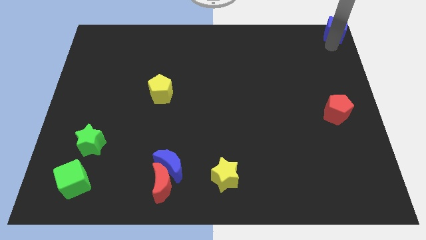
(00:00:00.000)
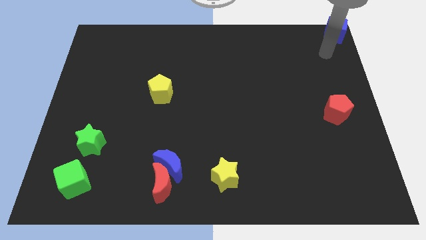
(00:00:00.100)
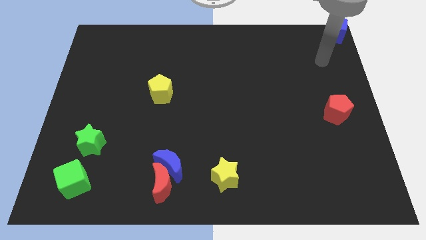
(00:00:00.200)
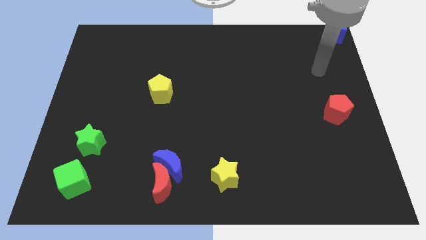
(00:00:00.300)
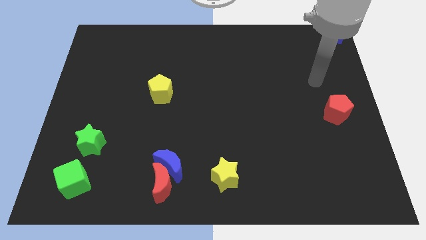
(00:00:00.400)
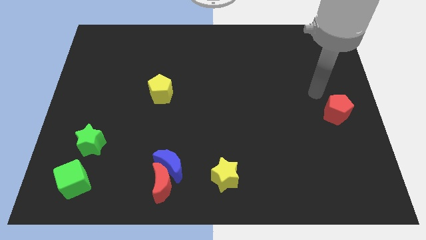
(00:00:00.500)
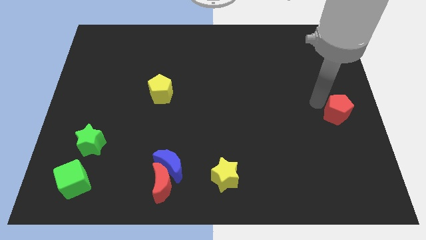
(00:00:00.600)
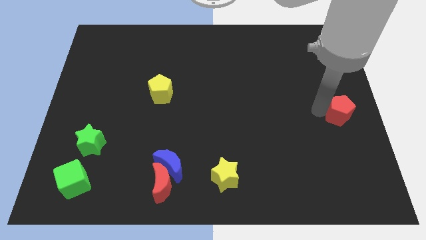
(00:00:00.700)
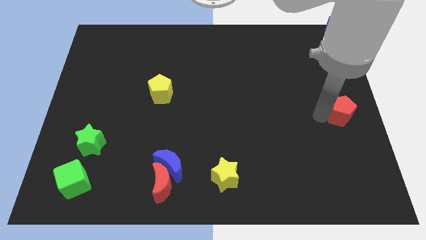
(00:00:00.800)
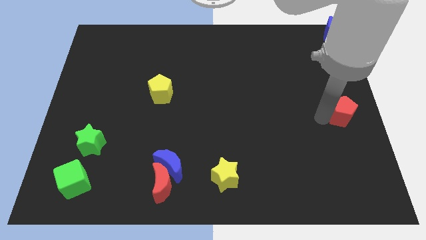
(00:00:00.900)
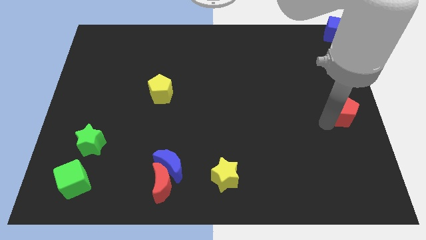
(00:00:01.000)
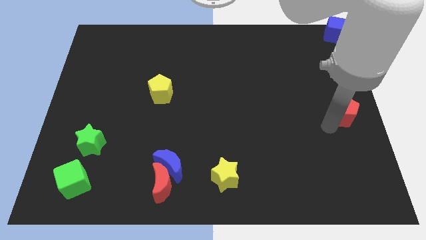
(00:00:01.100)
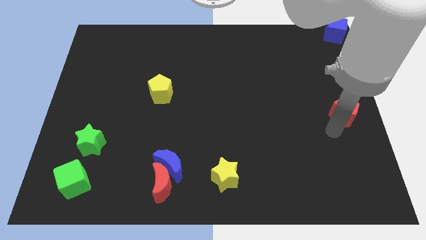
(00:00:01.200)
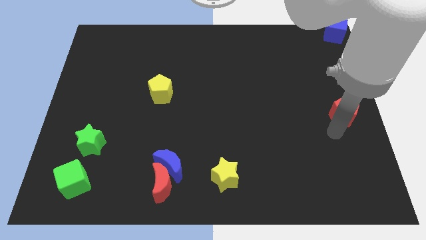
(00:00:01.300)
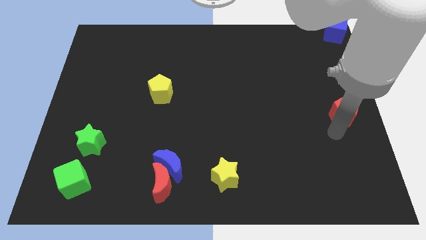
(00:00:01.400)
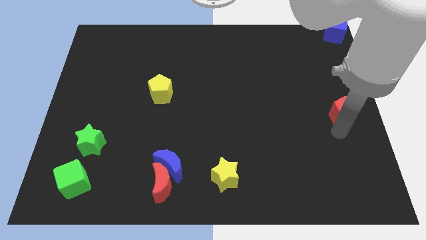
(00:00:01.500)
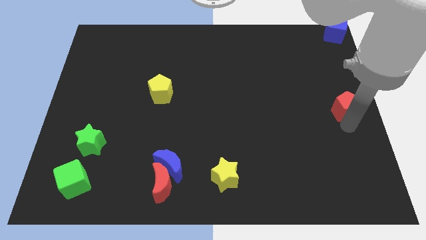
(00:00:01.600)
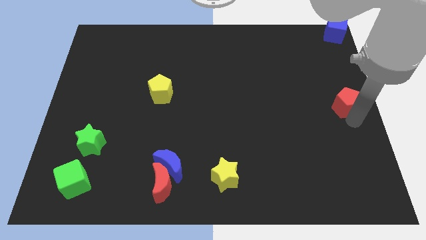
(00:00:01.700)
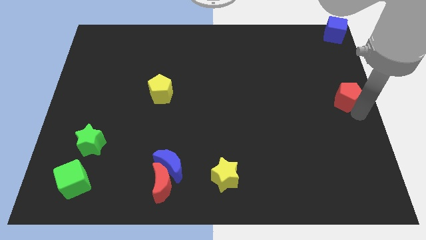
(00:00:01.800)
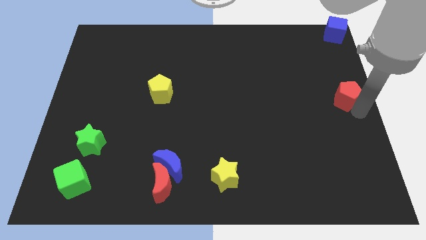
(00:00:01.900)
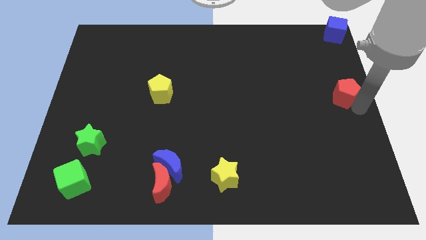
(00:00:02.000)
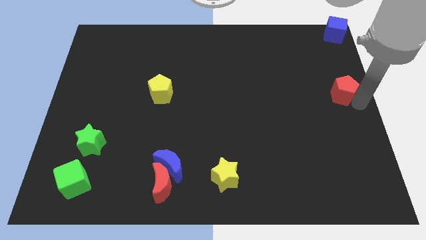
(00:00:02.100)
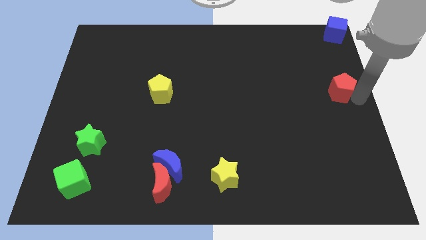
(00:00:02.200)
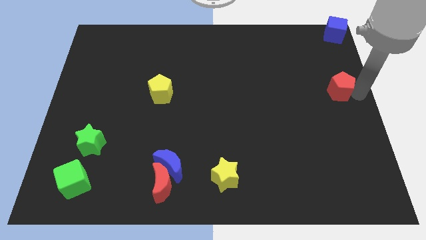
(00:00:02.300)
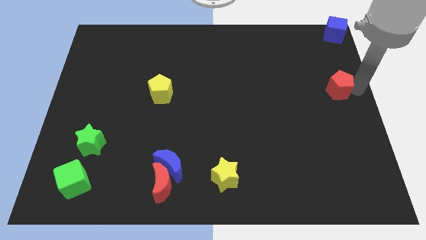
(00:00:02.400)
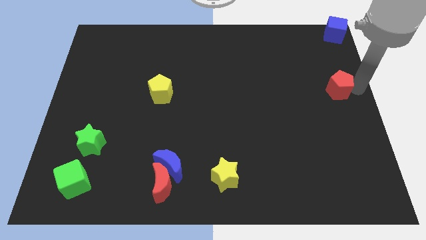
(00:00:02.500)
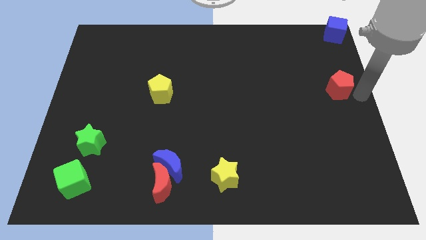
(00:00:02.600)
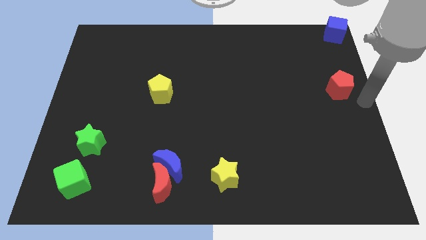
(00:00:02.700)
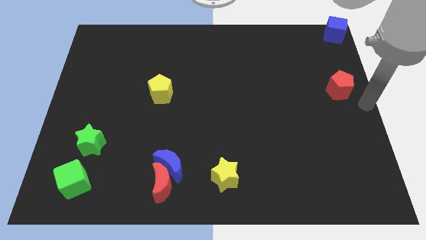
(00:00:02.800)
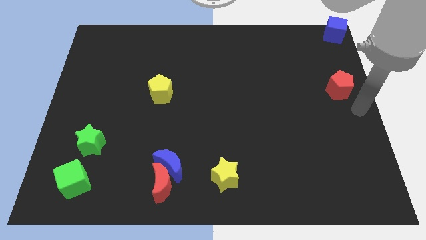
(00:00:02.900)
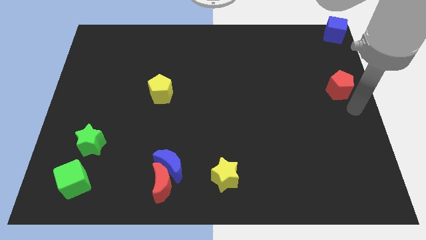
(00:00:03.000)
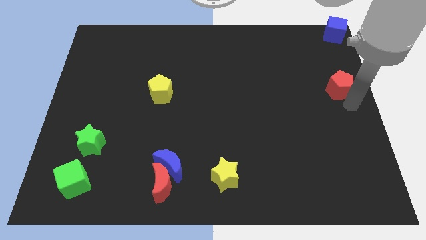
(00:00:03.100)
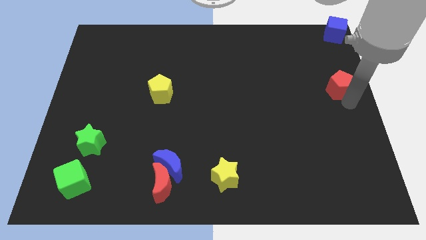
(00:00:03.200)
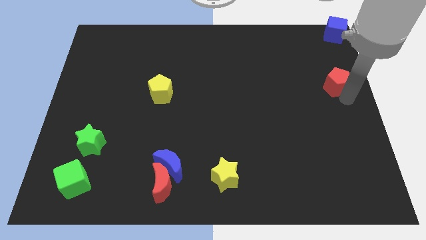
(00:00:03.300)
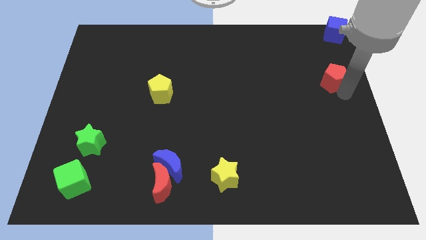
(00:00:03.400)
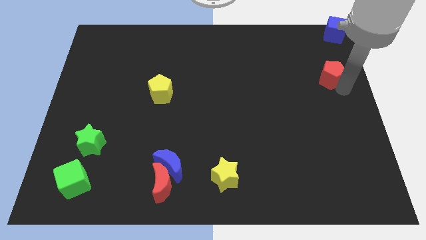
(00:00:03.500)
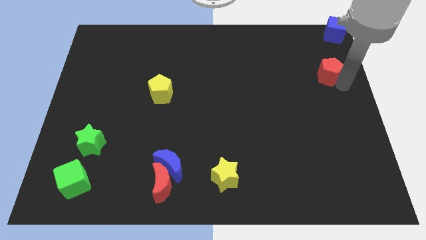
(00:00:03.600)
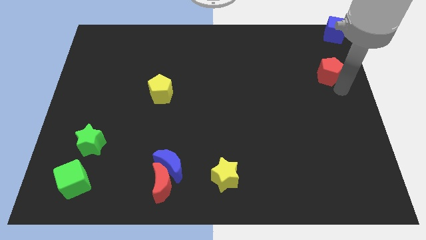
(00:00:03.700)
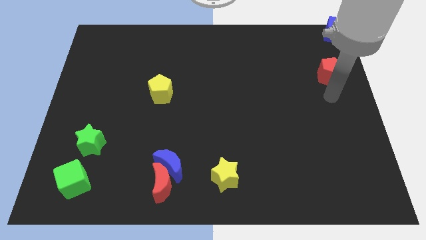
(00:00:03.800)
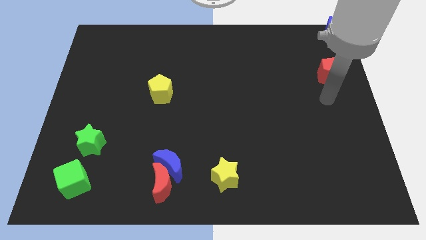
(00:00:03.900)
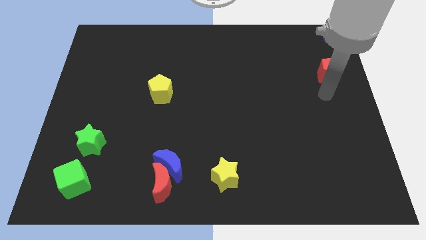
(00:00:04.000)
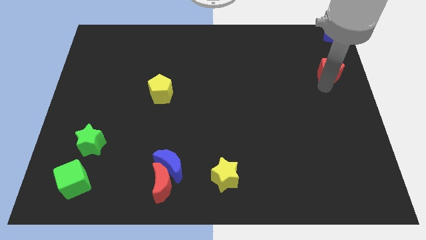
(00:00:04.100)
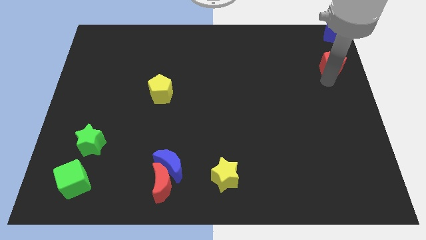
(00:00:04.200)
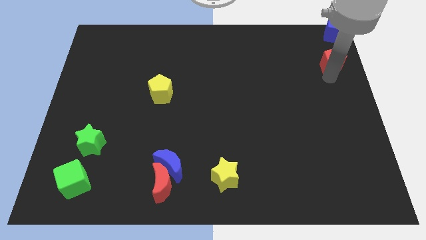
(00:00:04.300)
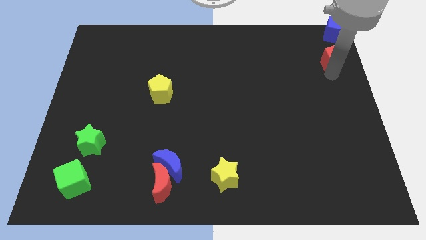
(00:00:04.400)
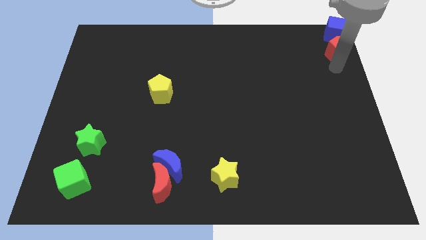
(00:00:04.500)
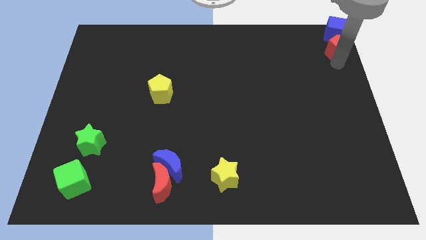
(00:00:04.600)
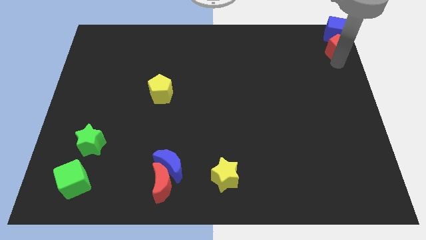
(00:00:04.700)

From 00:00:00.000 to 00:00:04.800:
push the red pentagon towards the top right corner of the board

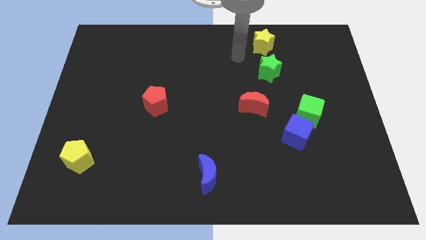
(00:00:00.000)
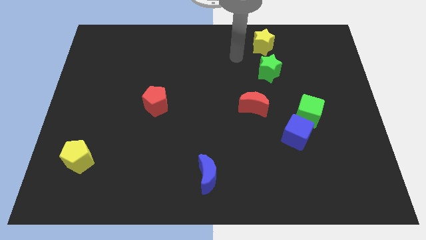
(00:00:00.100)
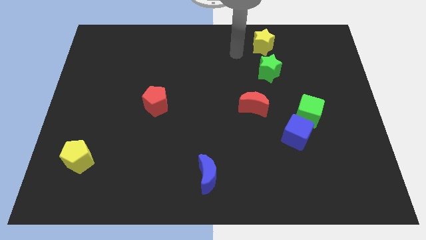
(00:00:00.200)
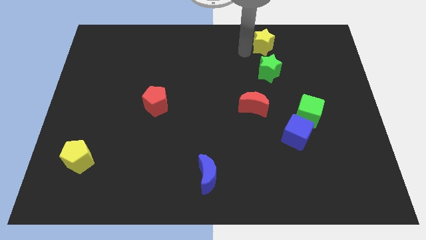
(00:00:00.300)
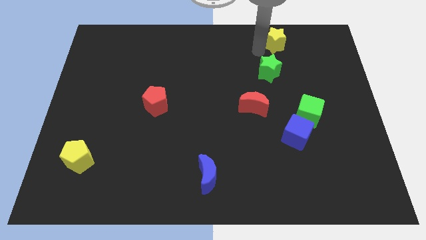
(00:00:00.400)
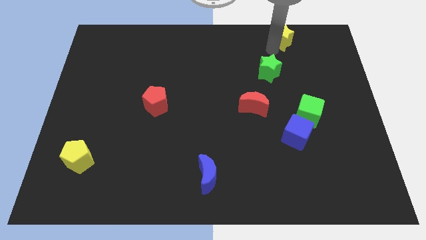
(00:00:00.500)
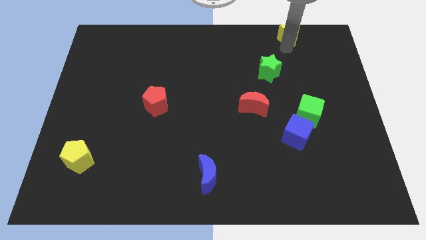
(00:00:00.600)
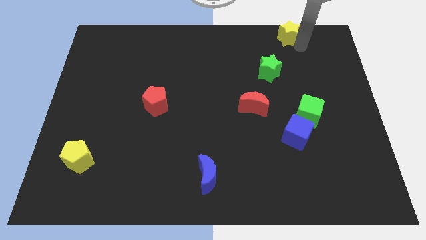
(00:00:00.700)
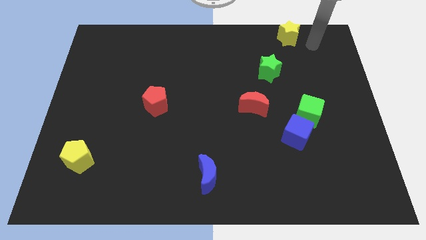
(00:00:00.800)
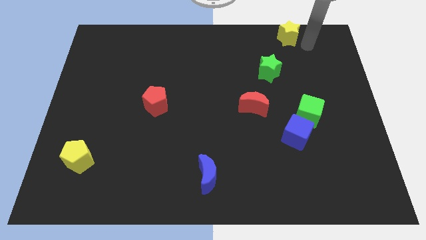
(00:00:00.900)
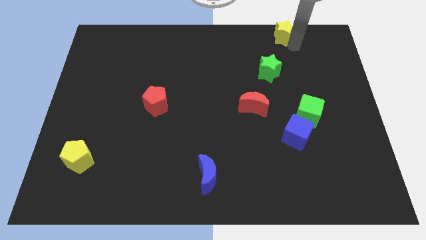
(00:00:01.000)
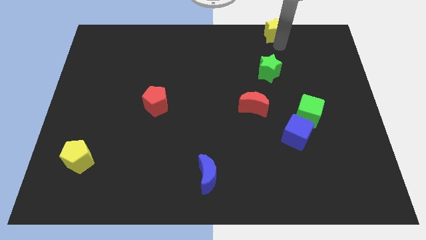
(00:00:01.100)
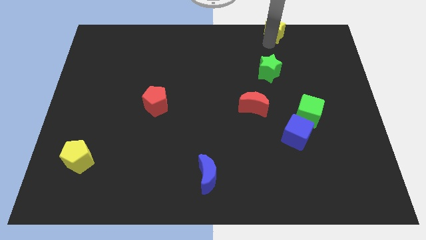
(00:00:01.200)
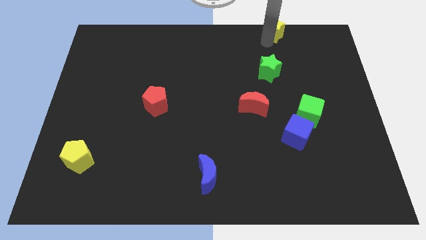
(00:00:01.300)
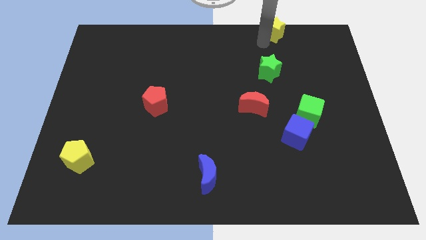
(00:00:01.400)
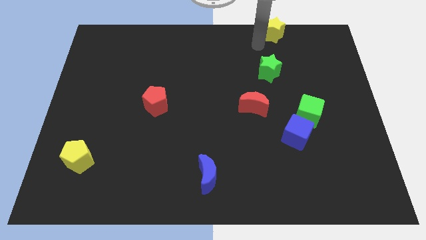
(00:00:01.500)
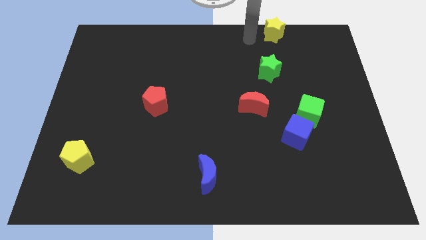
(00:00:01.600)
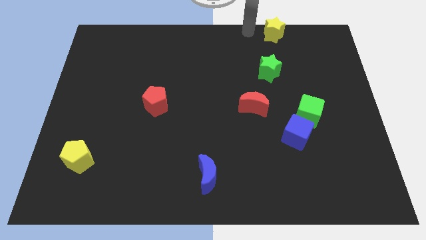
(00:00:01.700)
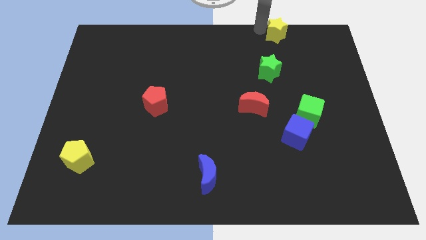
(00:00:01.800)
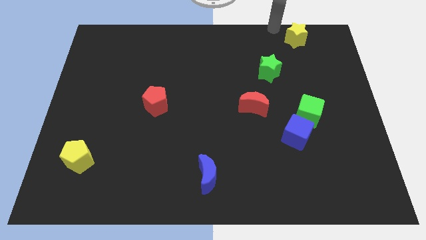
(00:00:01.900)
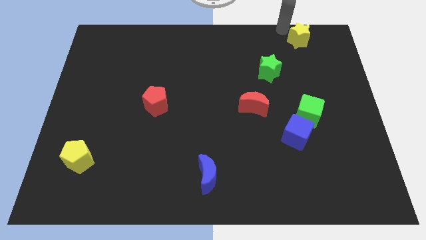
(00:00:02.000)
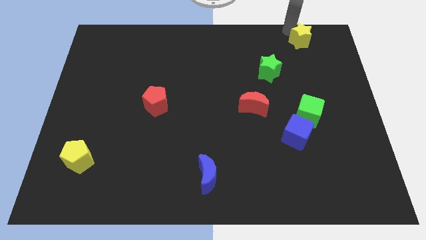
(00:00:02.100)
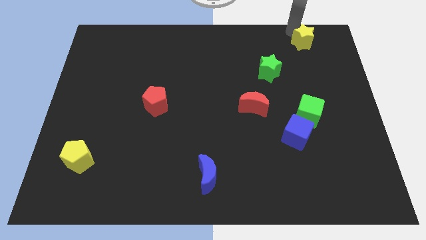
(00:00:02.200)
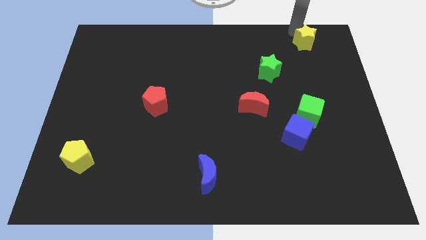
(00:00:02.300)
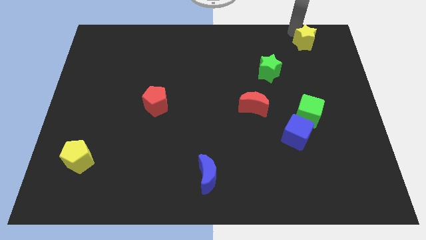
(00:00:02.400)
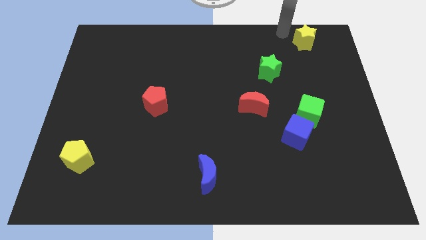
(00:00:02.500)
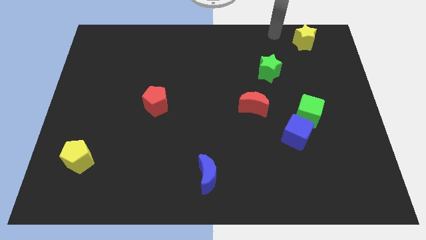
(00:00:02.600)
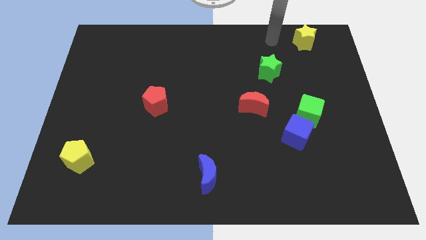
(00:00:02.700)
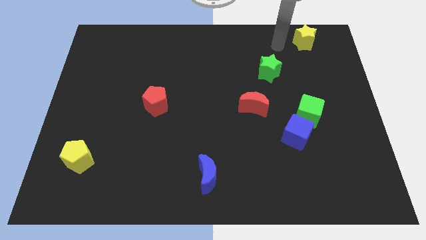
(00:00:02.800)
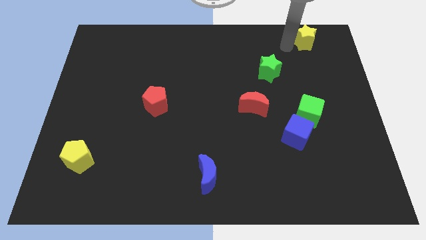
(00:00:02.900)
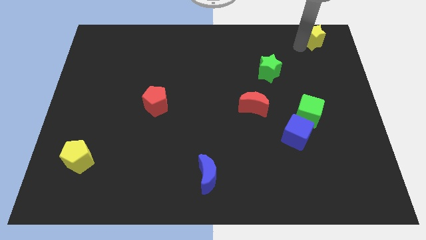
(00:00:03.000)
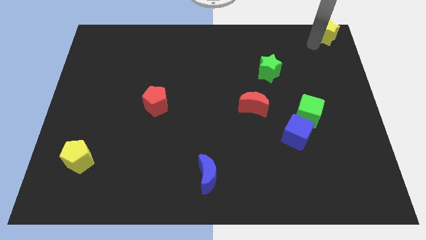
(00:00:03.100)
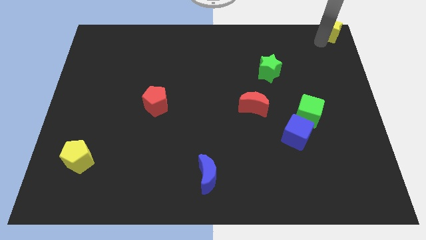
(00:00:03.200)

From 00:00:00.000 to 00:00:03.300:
place yellow star to the top right corner of the board

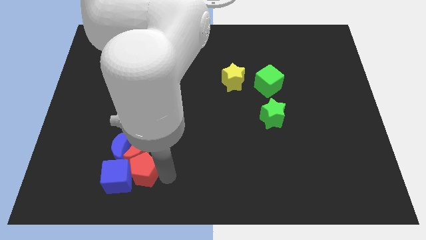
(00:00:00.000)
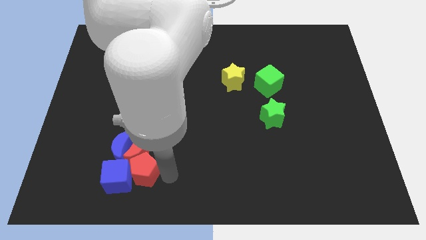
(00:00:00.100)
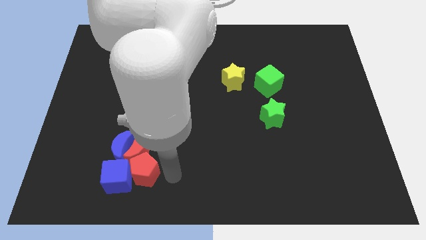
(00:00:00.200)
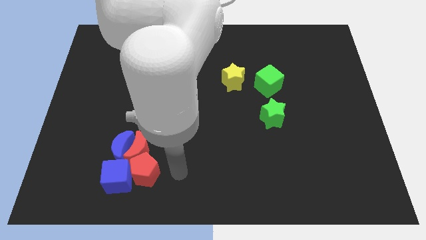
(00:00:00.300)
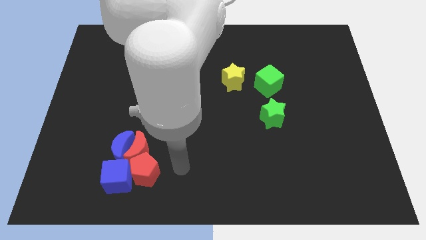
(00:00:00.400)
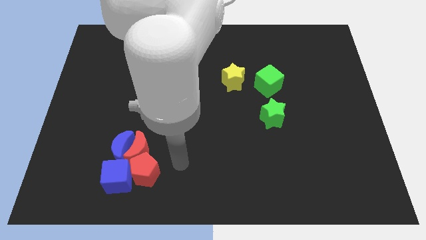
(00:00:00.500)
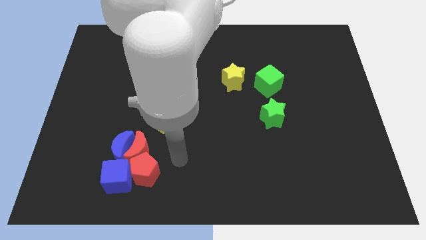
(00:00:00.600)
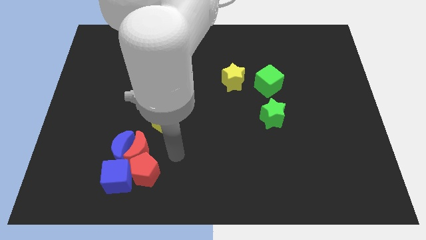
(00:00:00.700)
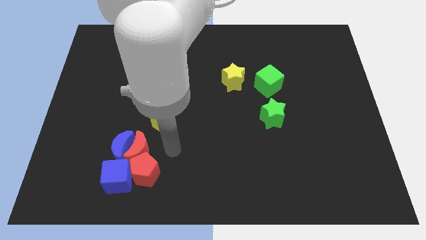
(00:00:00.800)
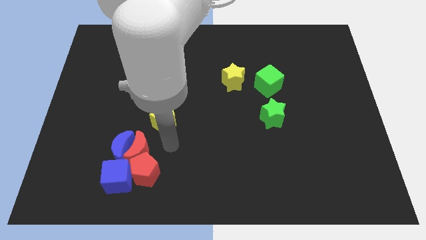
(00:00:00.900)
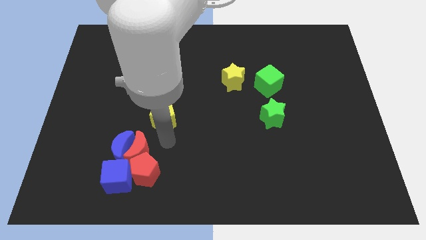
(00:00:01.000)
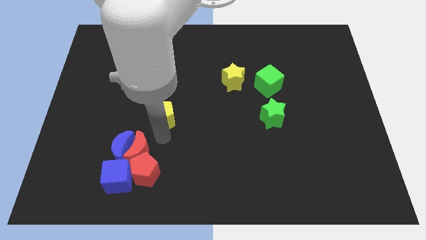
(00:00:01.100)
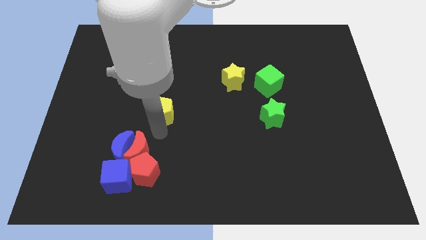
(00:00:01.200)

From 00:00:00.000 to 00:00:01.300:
move your arm bottom of the yellow pentagon
